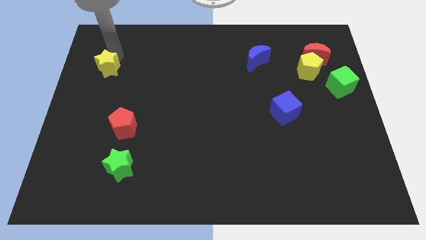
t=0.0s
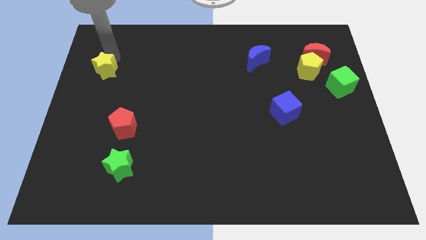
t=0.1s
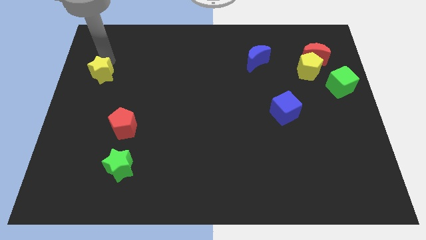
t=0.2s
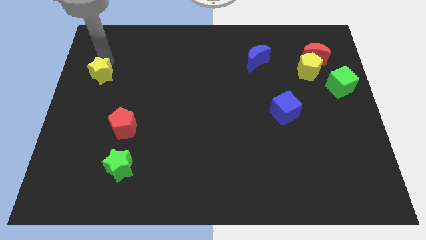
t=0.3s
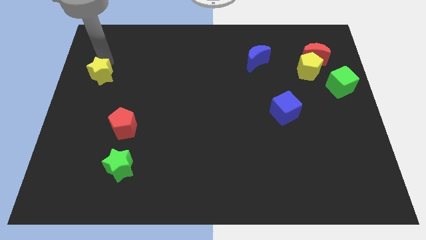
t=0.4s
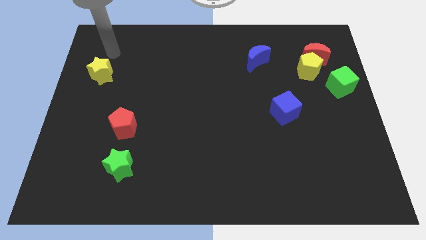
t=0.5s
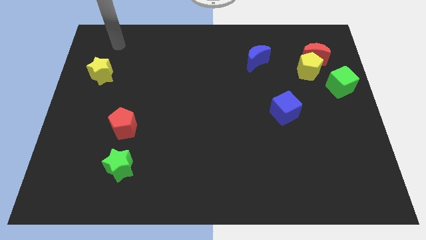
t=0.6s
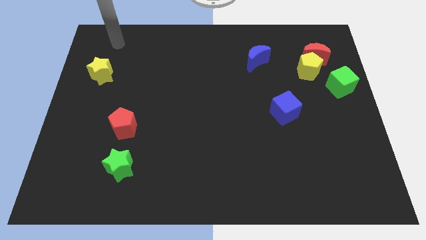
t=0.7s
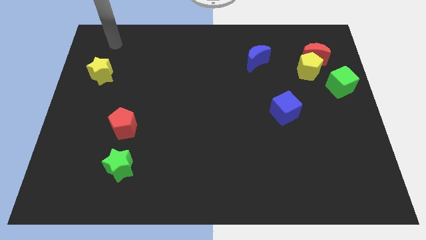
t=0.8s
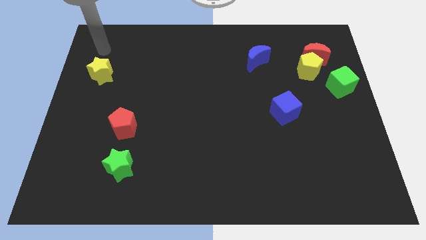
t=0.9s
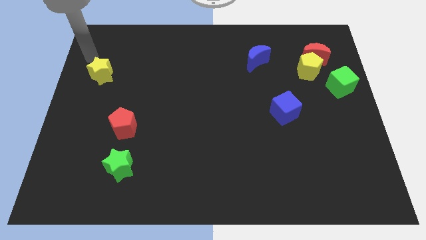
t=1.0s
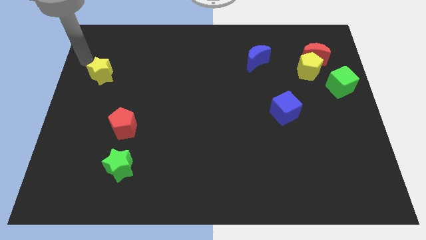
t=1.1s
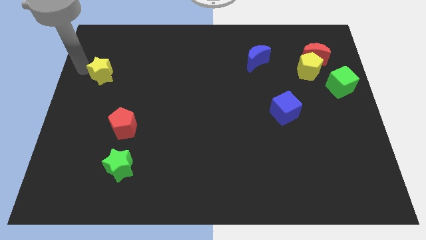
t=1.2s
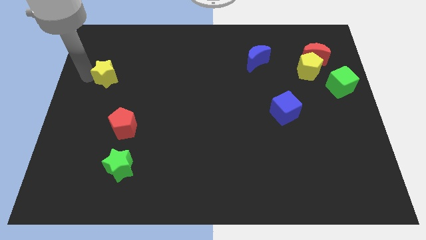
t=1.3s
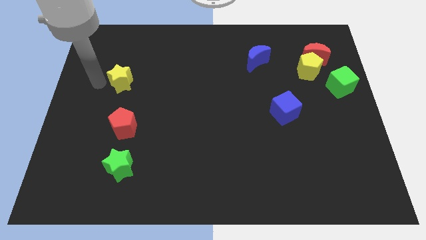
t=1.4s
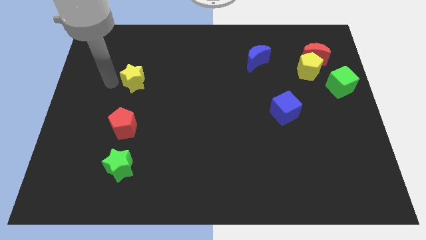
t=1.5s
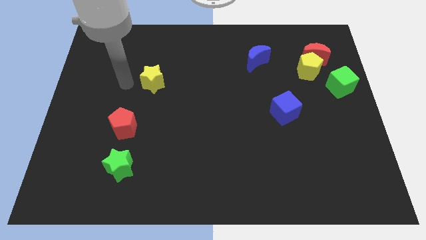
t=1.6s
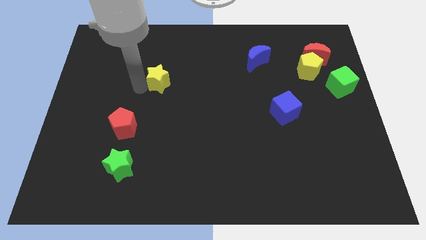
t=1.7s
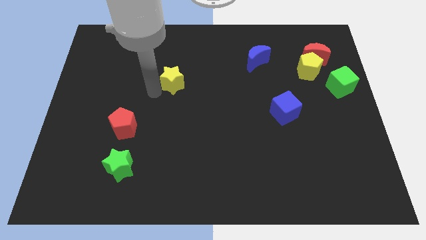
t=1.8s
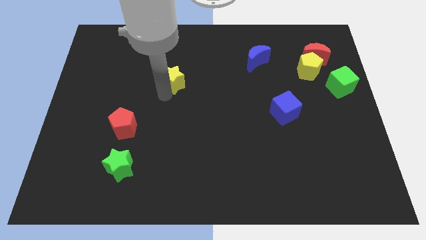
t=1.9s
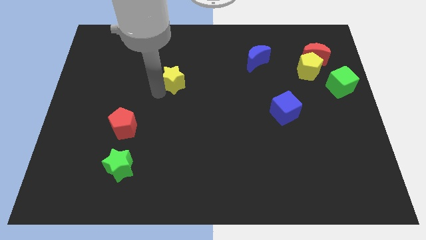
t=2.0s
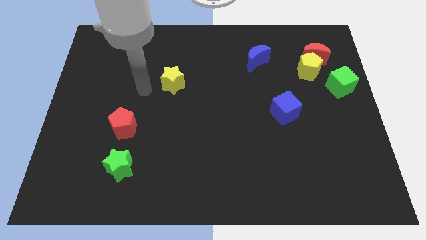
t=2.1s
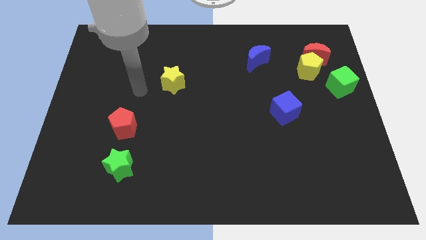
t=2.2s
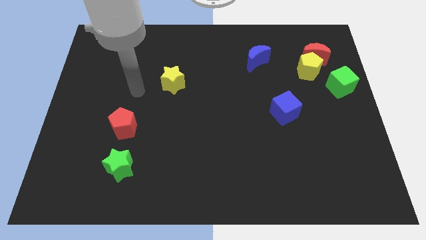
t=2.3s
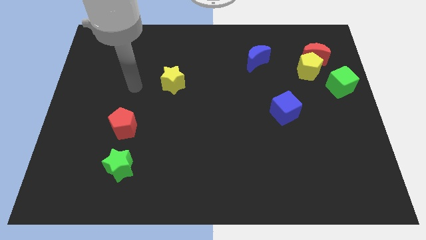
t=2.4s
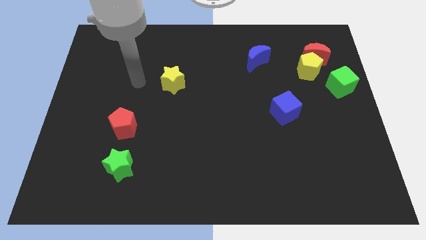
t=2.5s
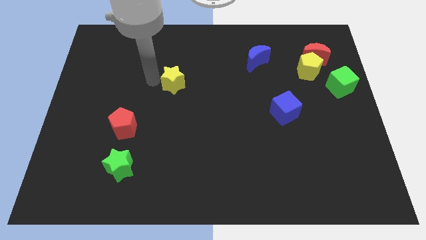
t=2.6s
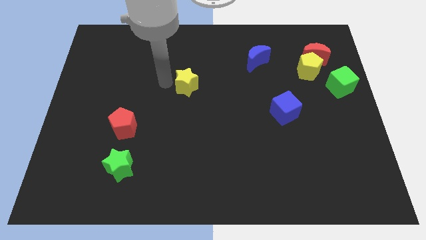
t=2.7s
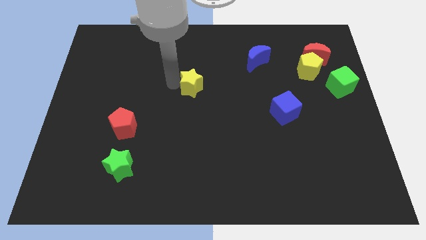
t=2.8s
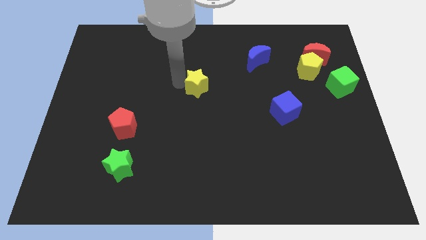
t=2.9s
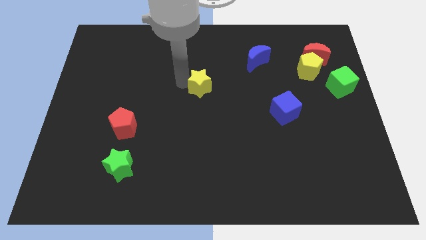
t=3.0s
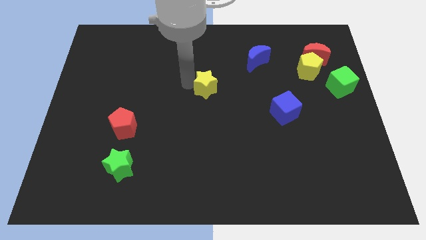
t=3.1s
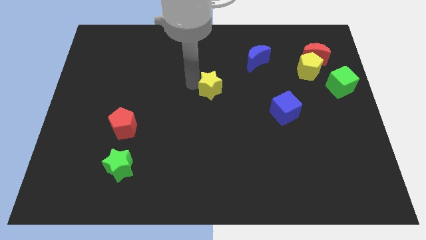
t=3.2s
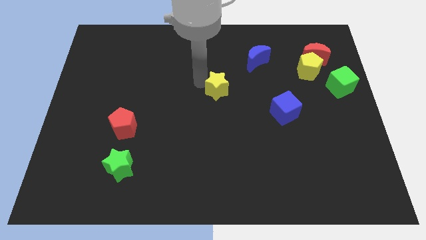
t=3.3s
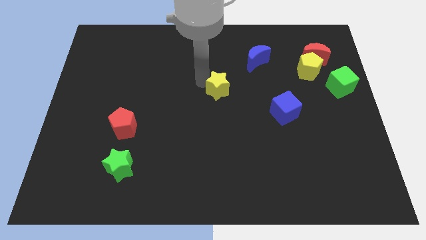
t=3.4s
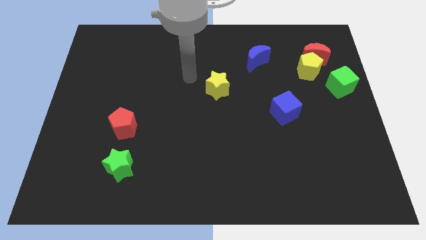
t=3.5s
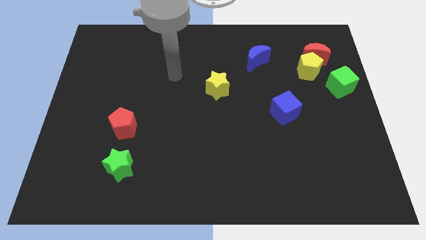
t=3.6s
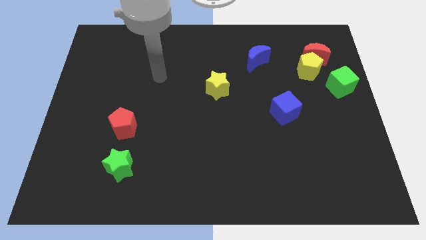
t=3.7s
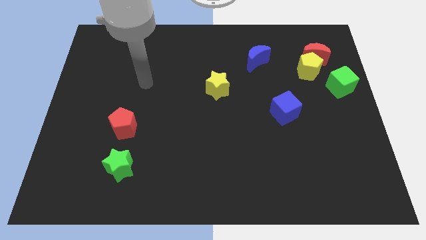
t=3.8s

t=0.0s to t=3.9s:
move the yellow star diagonal top right to green star

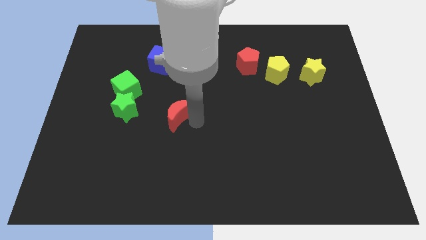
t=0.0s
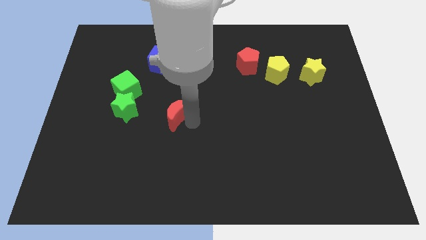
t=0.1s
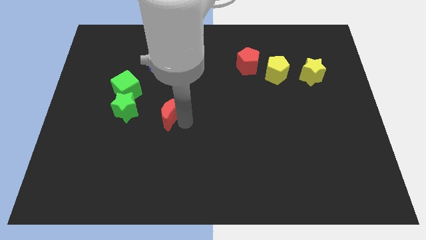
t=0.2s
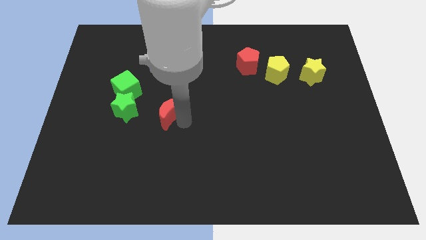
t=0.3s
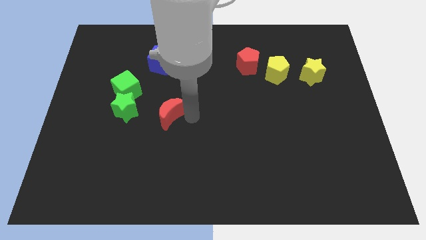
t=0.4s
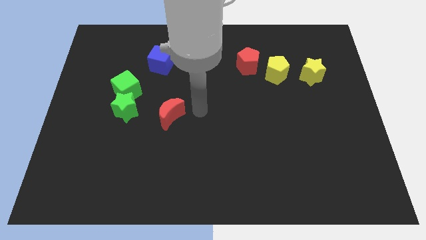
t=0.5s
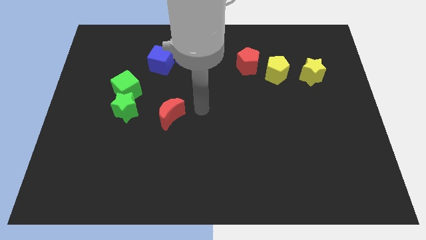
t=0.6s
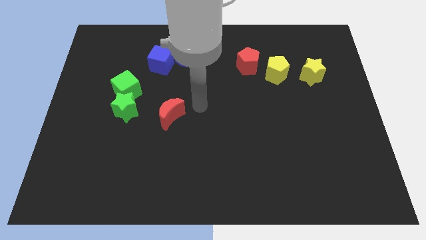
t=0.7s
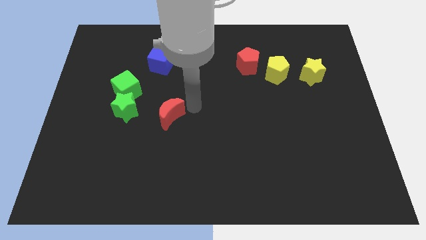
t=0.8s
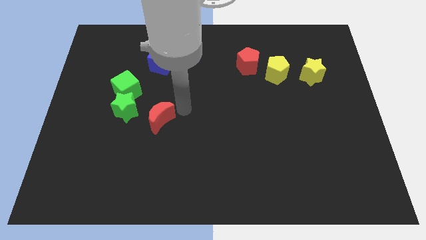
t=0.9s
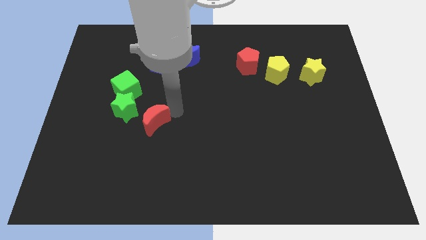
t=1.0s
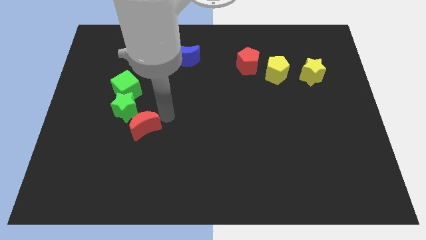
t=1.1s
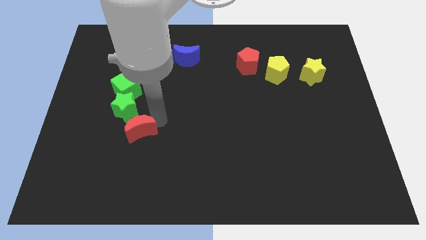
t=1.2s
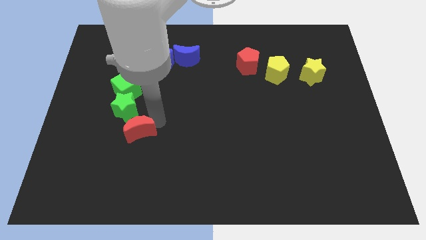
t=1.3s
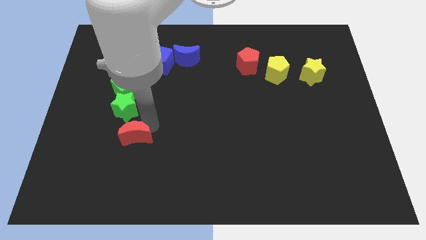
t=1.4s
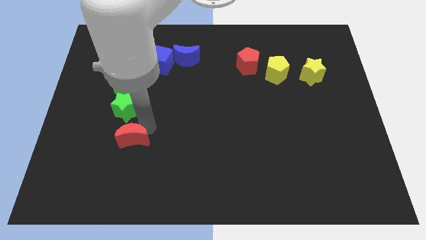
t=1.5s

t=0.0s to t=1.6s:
place the red crescent downwards to the green star

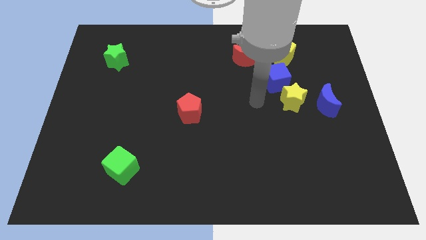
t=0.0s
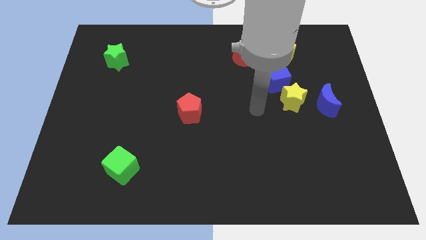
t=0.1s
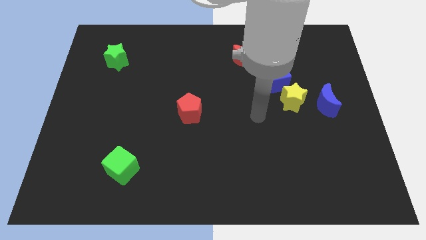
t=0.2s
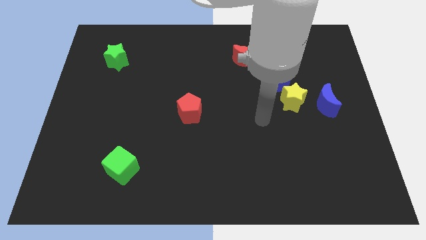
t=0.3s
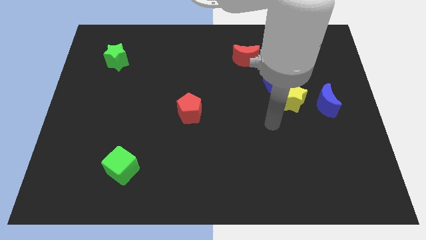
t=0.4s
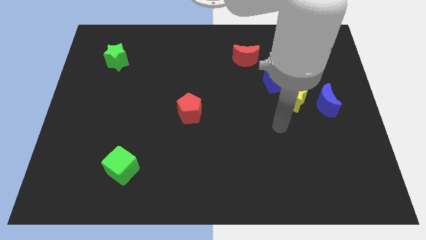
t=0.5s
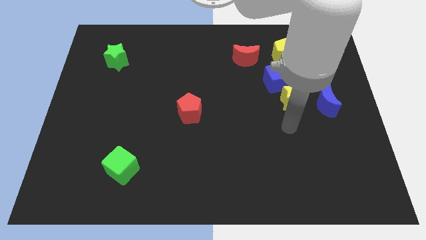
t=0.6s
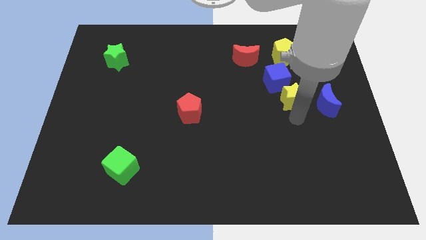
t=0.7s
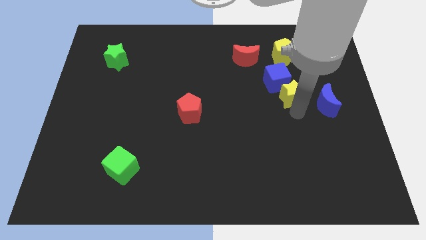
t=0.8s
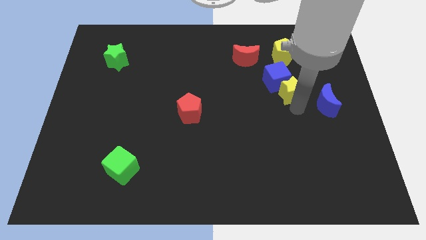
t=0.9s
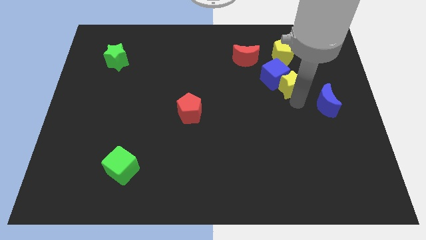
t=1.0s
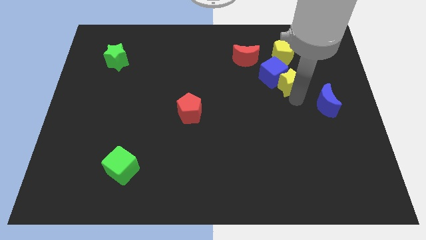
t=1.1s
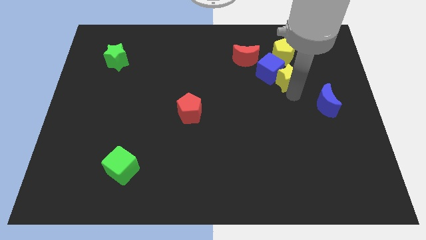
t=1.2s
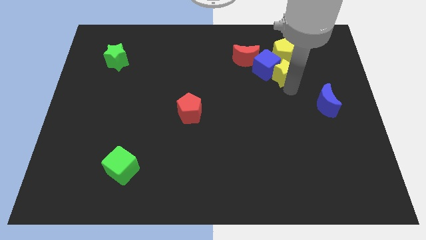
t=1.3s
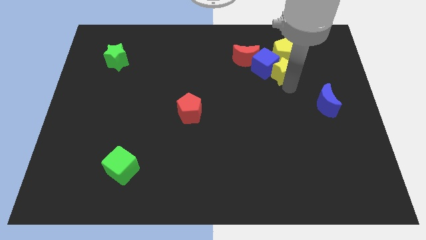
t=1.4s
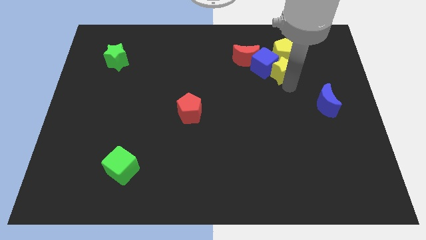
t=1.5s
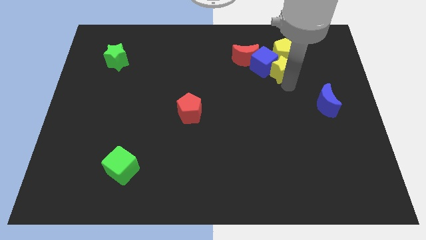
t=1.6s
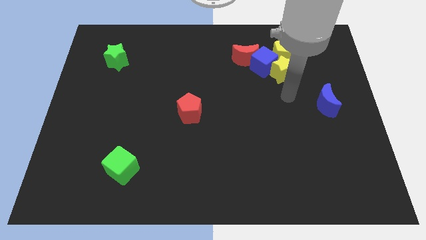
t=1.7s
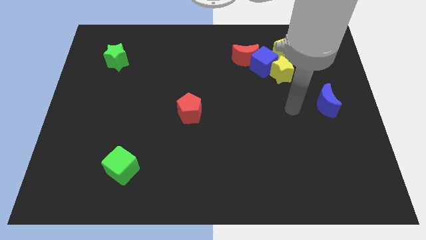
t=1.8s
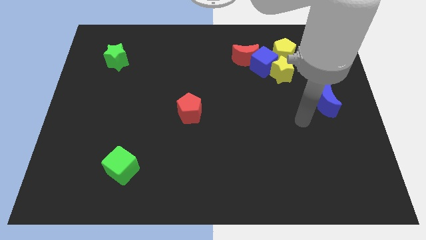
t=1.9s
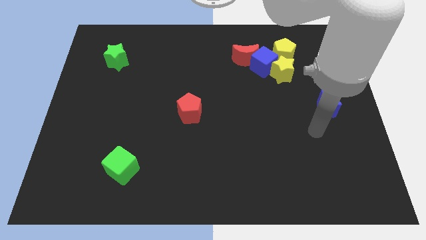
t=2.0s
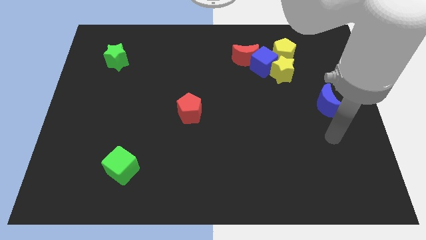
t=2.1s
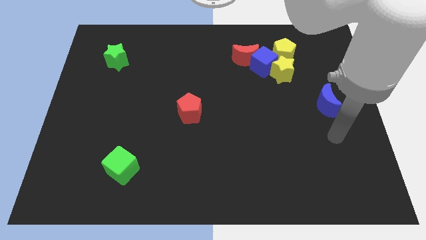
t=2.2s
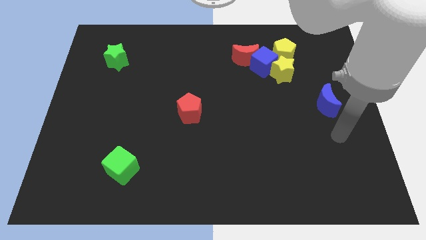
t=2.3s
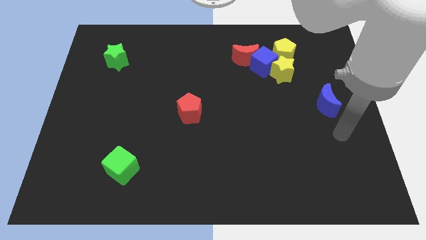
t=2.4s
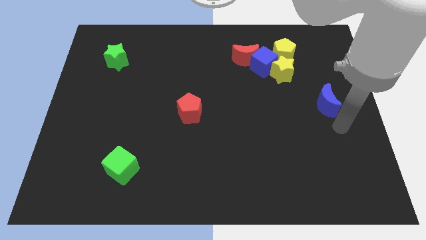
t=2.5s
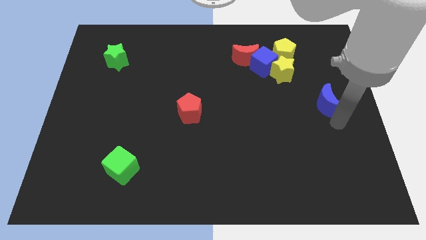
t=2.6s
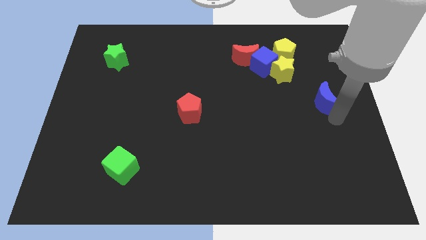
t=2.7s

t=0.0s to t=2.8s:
push the yellow star into the blue cube

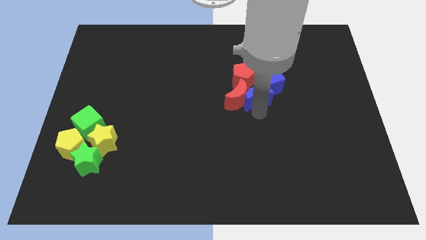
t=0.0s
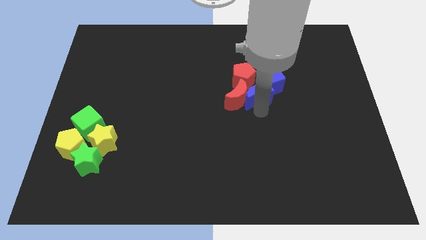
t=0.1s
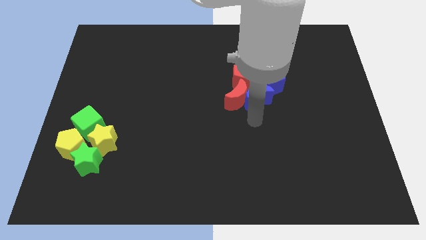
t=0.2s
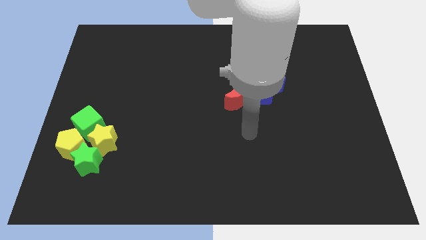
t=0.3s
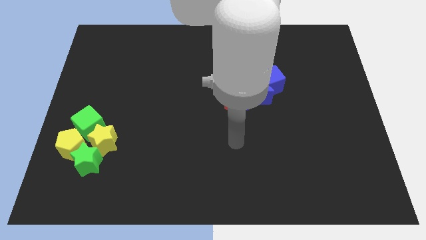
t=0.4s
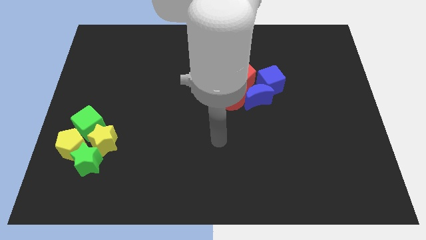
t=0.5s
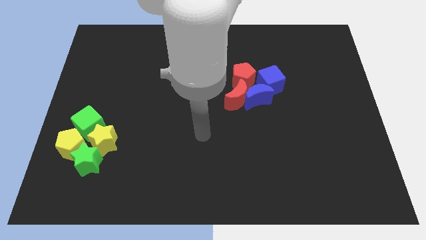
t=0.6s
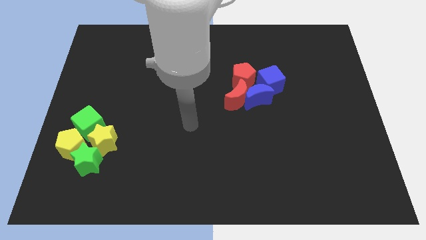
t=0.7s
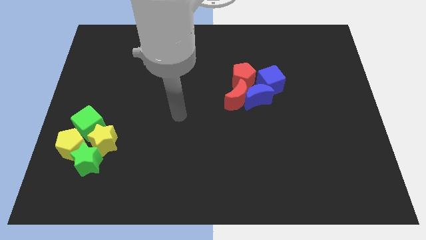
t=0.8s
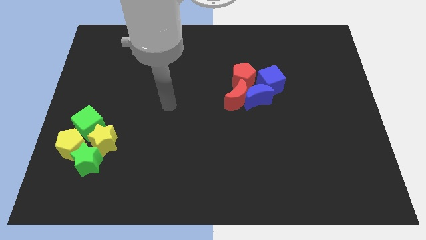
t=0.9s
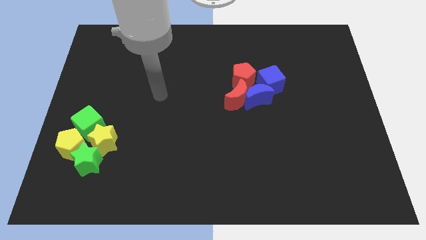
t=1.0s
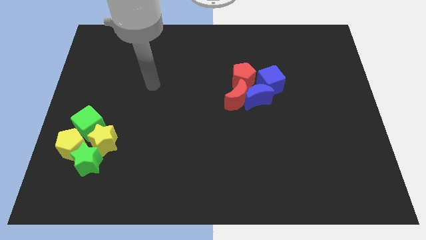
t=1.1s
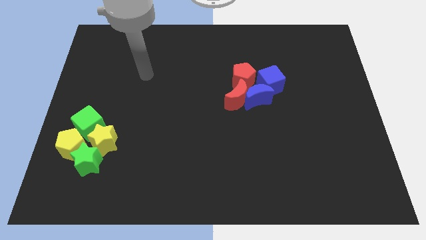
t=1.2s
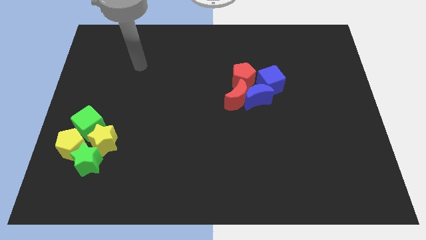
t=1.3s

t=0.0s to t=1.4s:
place red and blue blocks together into a group
